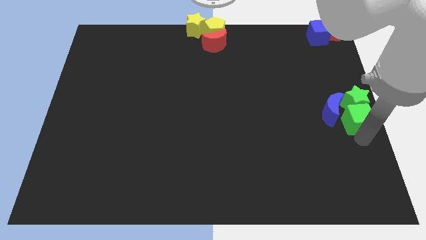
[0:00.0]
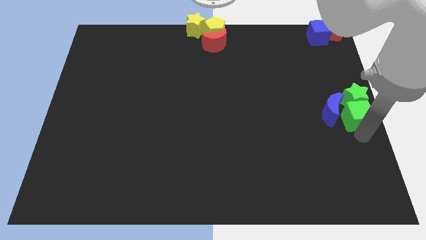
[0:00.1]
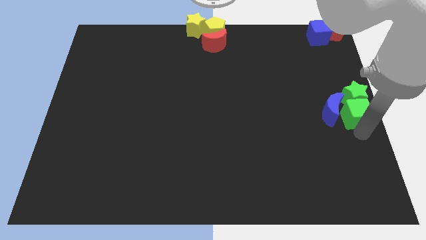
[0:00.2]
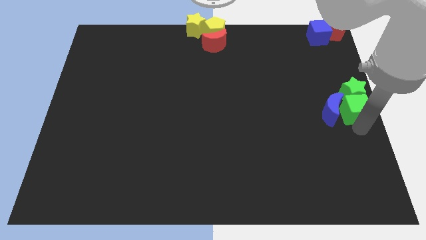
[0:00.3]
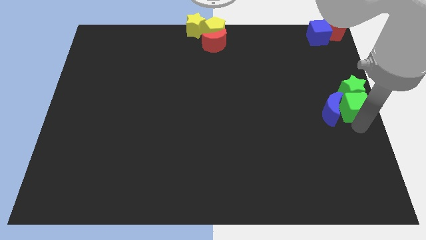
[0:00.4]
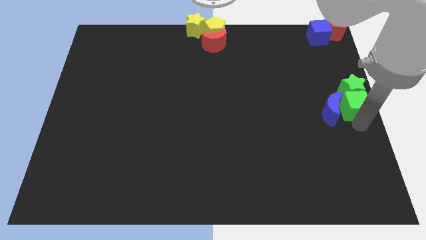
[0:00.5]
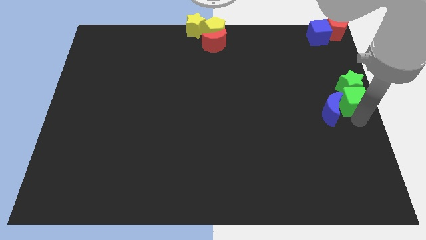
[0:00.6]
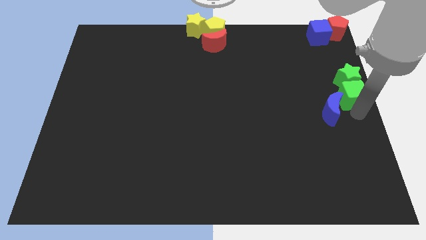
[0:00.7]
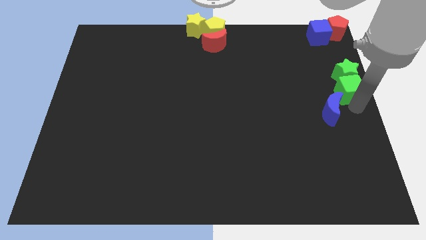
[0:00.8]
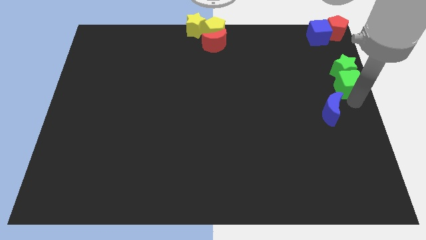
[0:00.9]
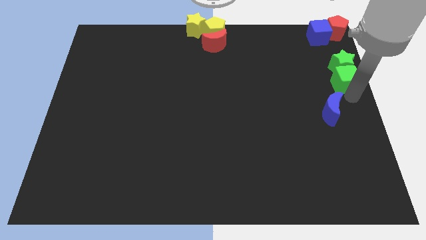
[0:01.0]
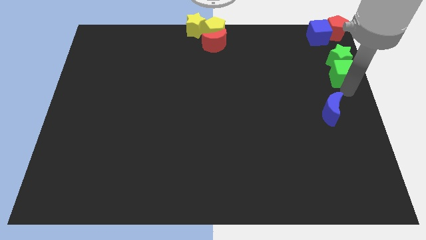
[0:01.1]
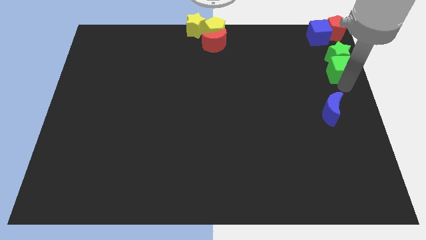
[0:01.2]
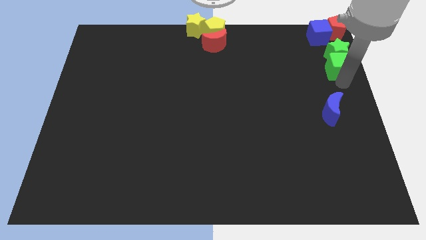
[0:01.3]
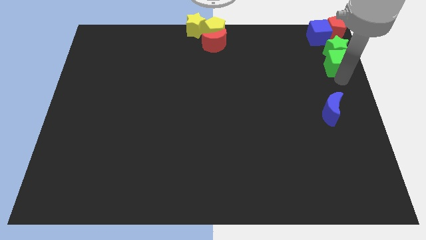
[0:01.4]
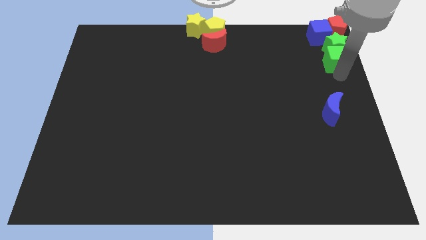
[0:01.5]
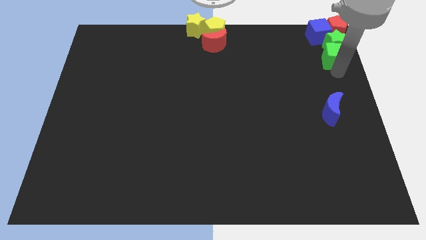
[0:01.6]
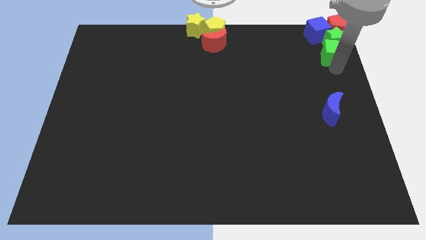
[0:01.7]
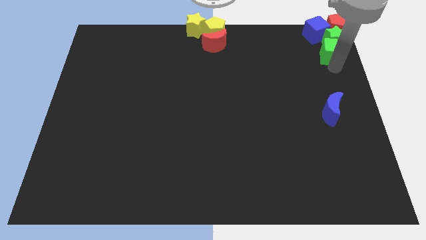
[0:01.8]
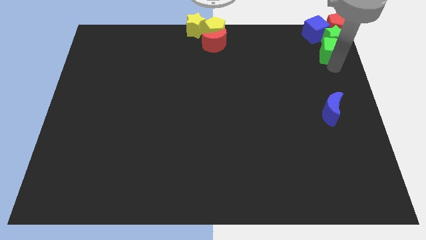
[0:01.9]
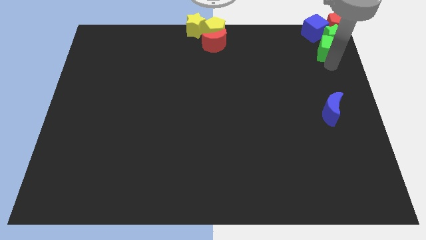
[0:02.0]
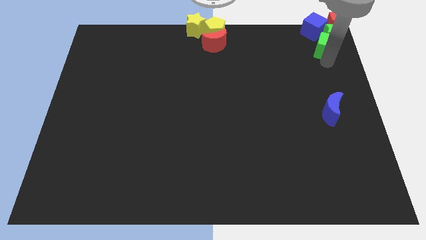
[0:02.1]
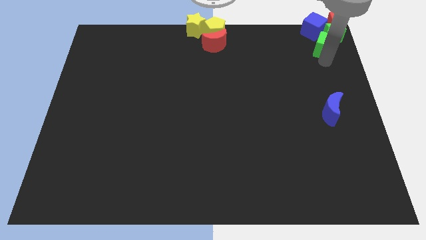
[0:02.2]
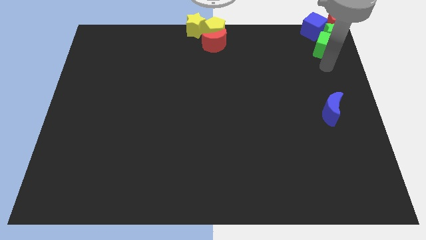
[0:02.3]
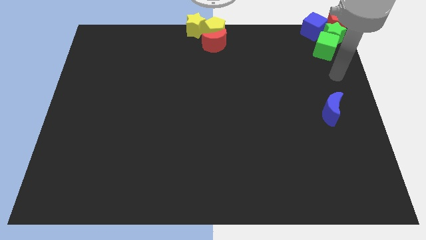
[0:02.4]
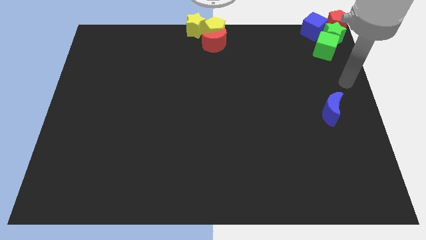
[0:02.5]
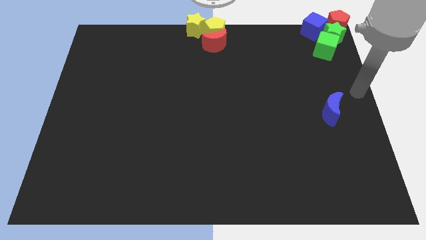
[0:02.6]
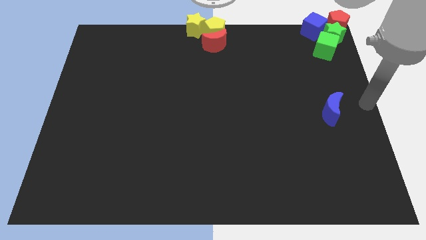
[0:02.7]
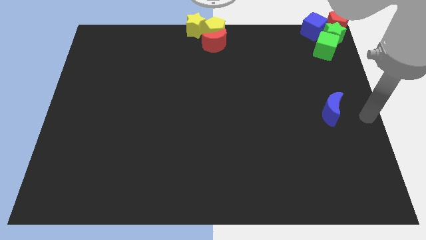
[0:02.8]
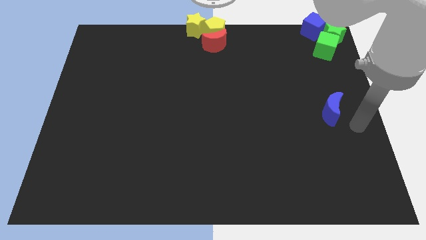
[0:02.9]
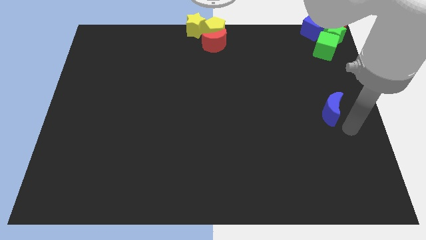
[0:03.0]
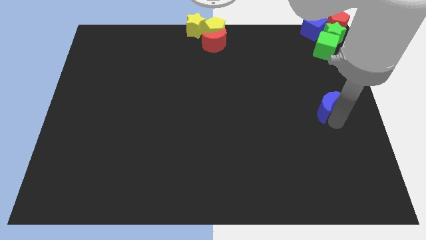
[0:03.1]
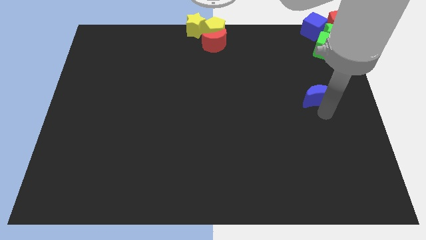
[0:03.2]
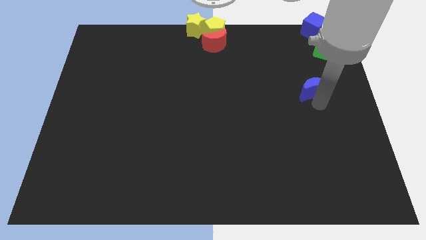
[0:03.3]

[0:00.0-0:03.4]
push green blocks towards red pentagon and blue cube

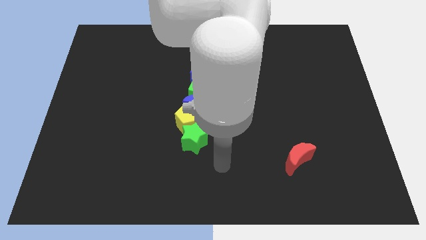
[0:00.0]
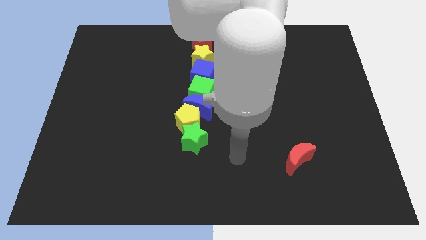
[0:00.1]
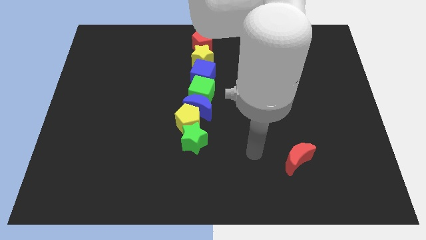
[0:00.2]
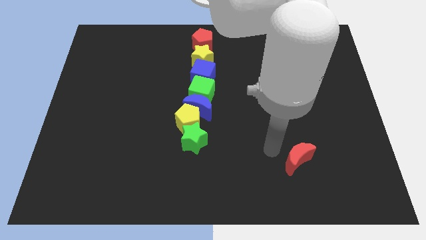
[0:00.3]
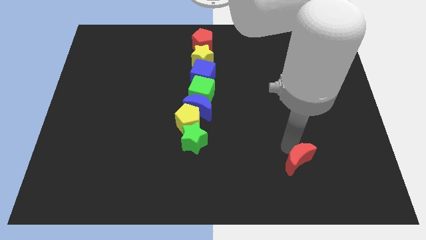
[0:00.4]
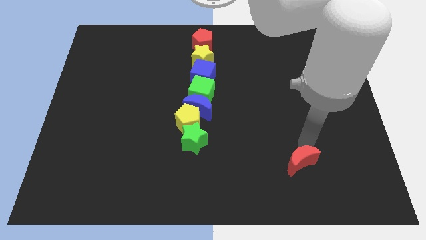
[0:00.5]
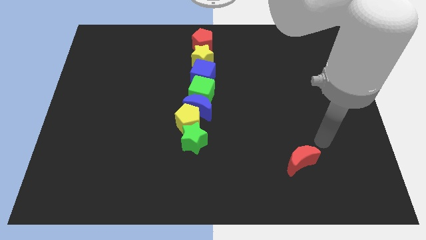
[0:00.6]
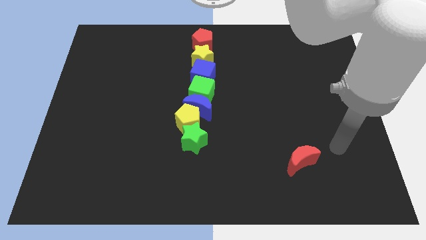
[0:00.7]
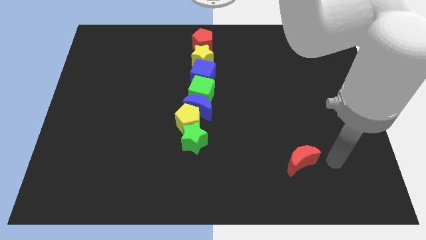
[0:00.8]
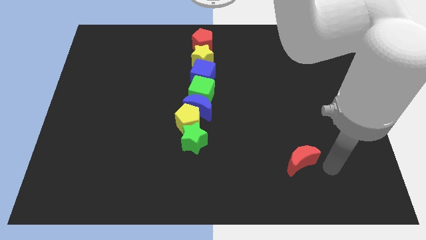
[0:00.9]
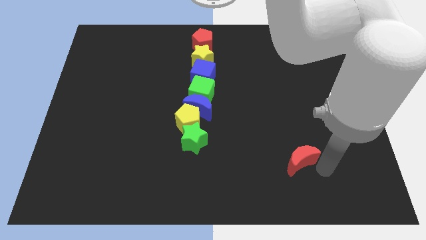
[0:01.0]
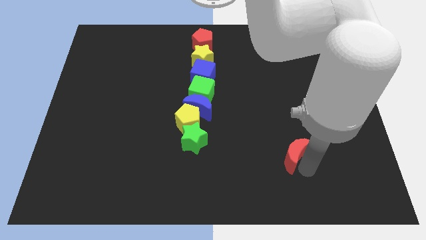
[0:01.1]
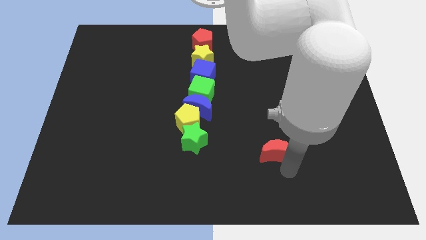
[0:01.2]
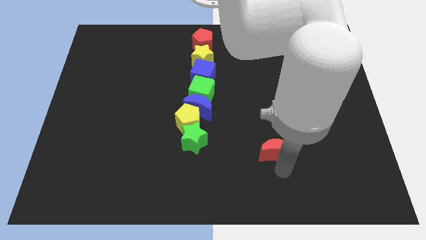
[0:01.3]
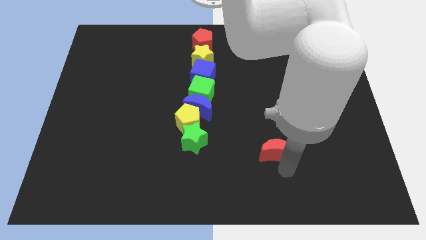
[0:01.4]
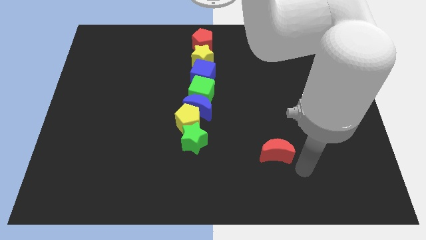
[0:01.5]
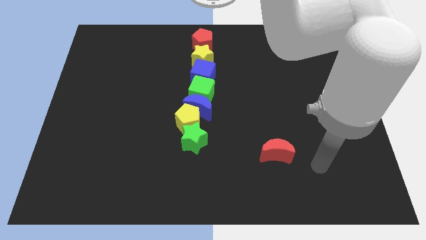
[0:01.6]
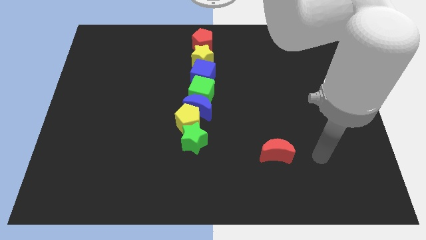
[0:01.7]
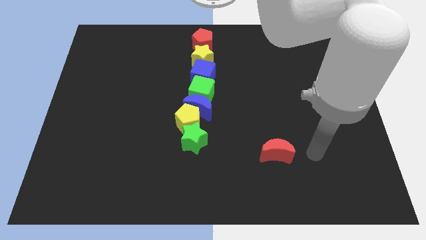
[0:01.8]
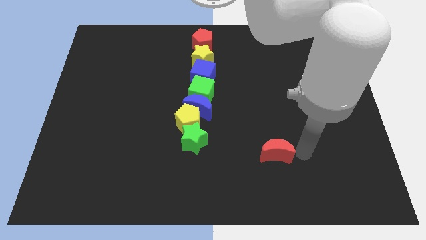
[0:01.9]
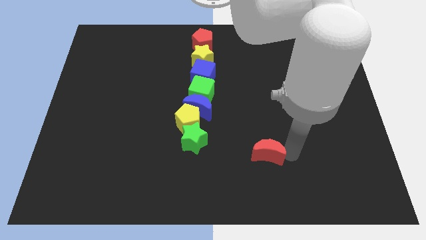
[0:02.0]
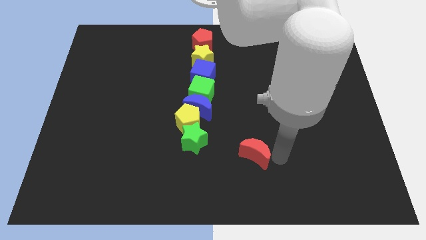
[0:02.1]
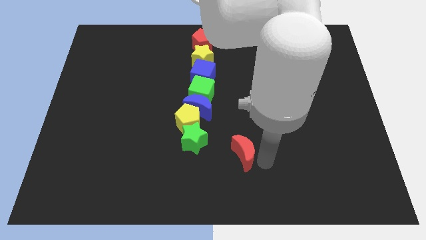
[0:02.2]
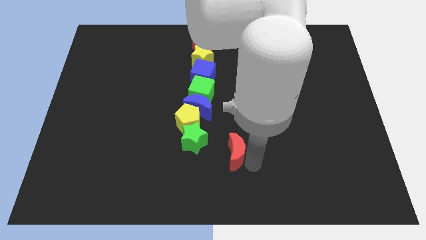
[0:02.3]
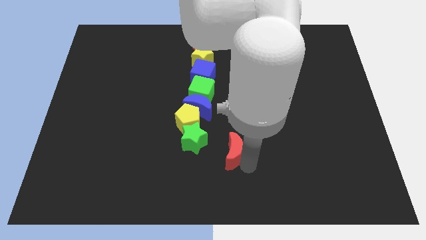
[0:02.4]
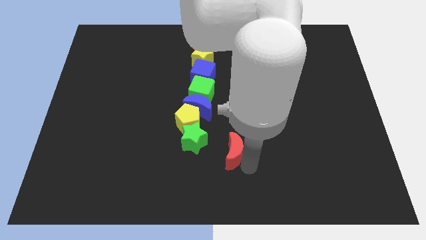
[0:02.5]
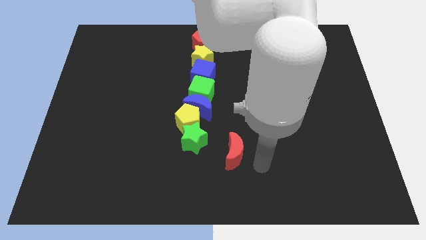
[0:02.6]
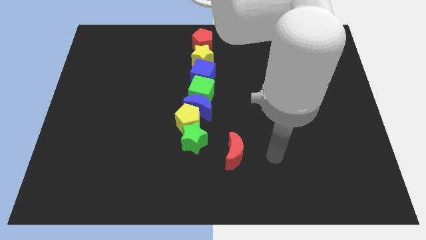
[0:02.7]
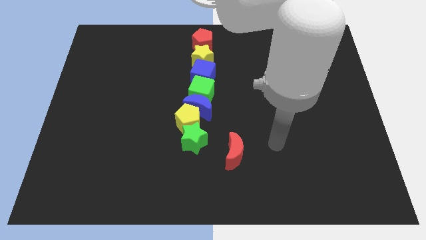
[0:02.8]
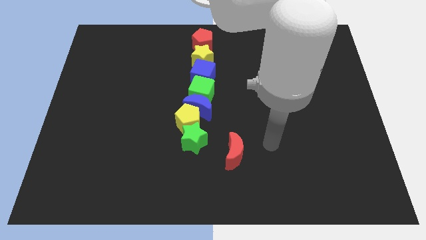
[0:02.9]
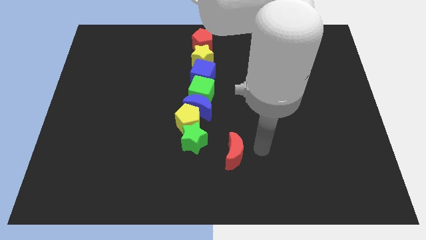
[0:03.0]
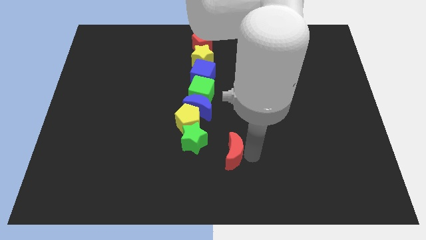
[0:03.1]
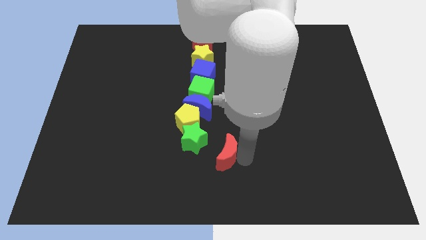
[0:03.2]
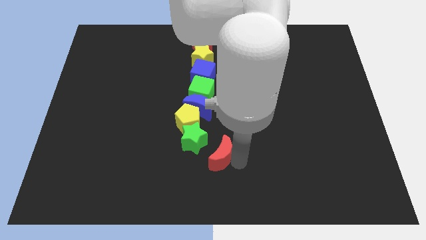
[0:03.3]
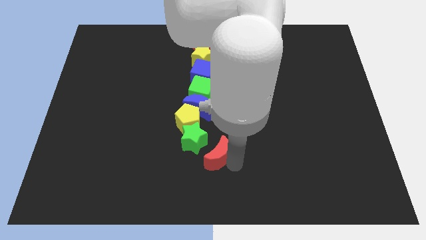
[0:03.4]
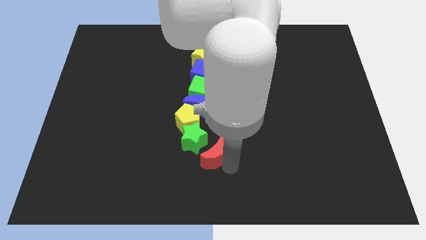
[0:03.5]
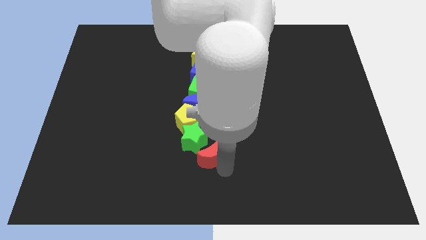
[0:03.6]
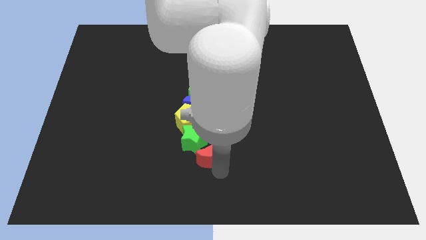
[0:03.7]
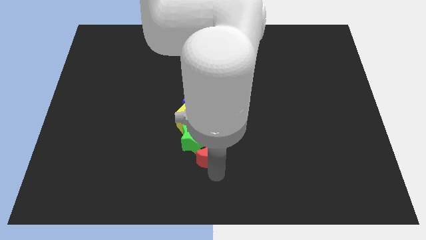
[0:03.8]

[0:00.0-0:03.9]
push the red moon towards the center

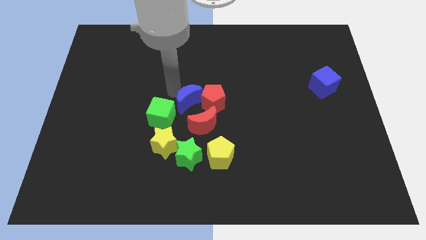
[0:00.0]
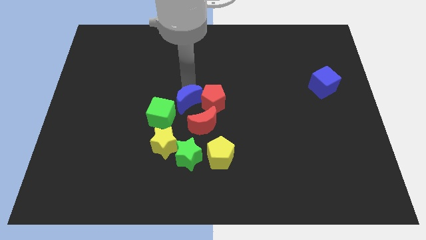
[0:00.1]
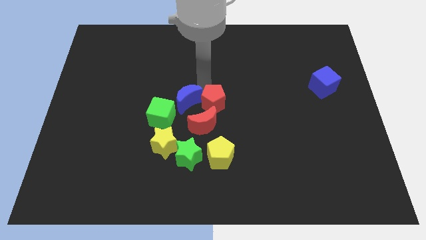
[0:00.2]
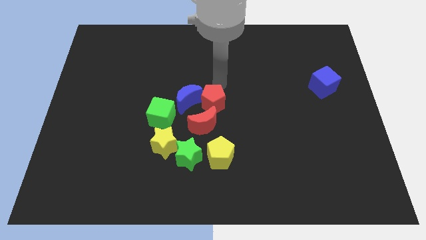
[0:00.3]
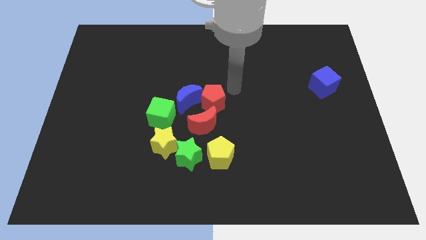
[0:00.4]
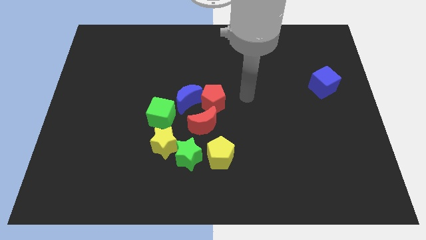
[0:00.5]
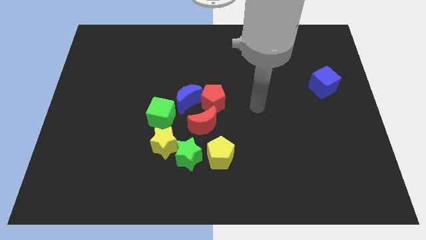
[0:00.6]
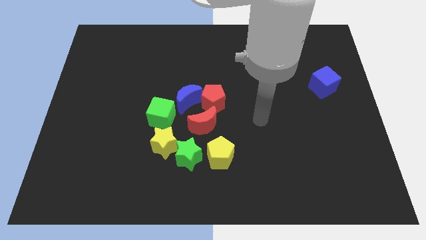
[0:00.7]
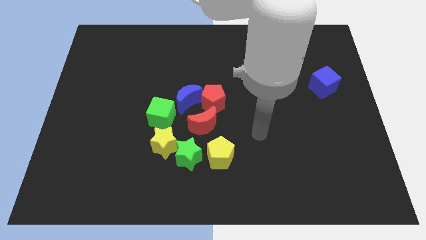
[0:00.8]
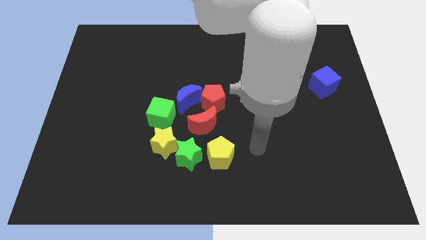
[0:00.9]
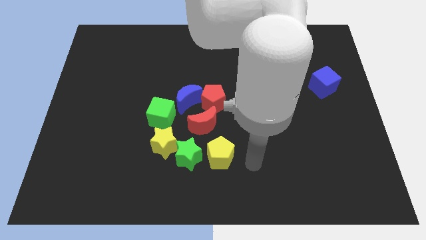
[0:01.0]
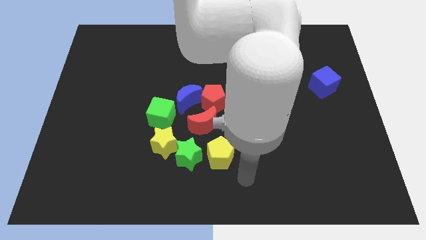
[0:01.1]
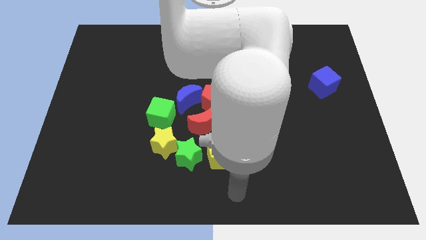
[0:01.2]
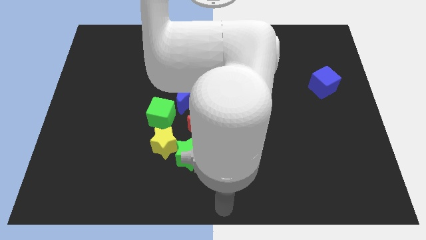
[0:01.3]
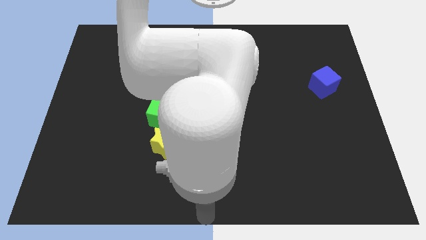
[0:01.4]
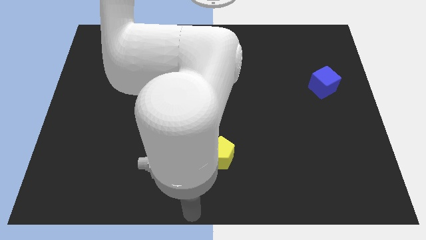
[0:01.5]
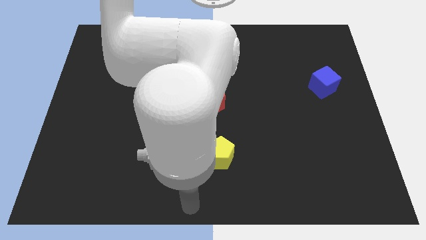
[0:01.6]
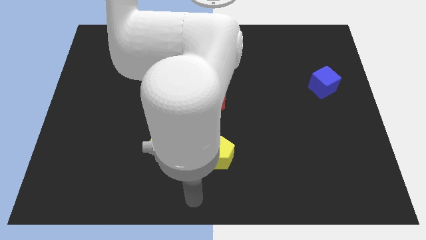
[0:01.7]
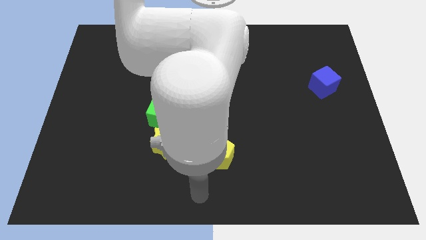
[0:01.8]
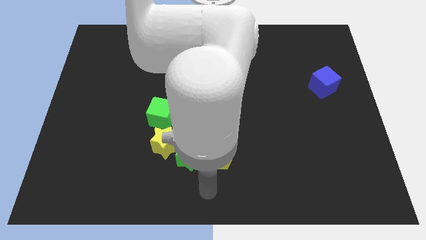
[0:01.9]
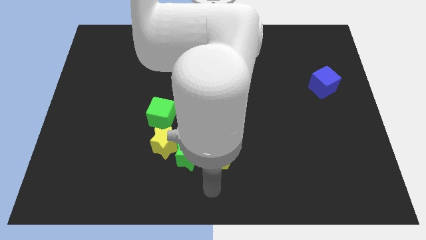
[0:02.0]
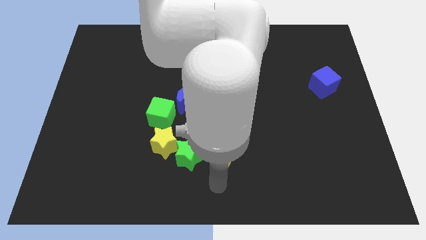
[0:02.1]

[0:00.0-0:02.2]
point your arm to the bottom of the yellow pentagon
